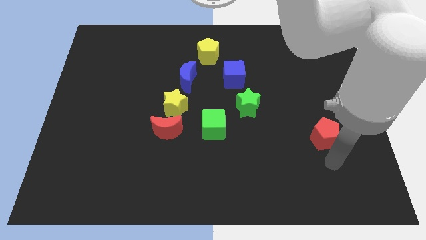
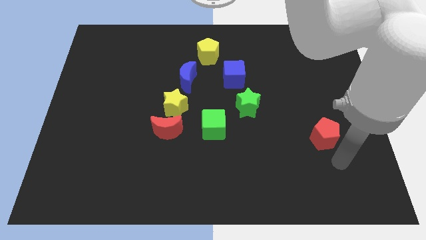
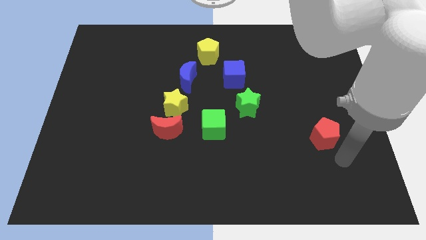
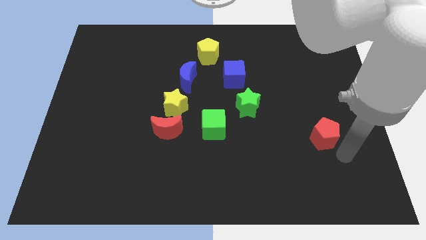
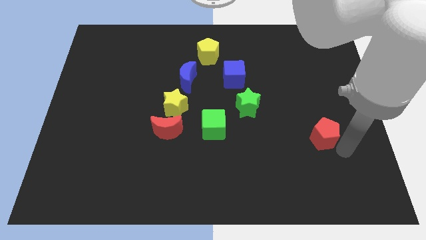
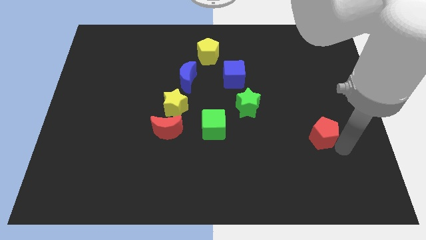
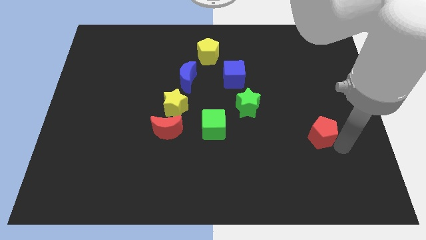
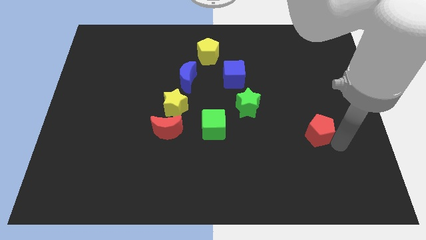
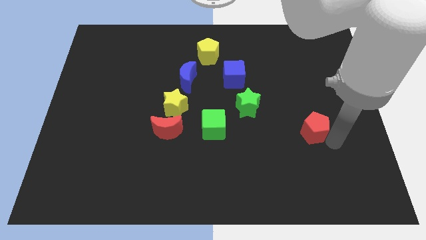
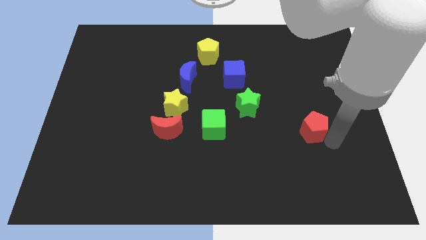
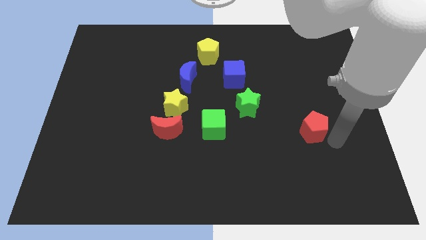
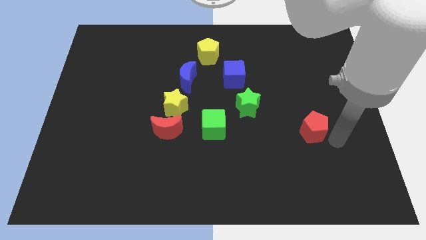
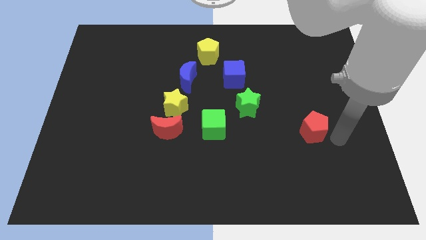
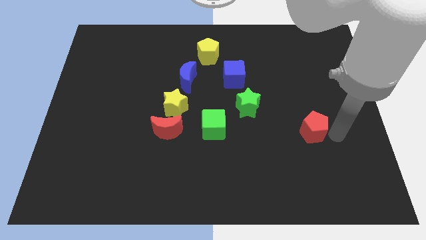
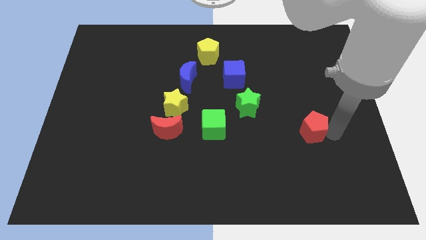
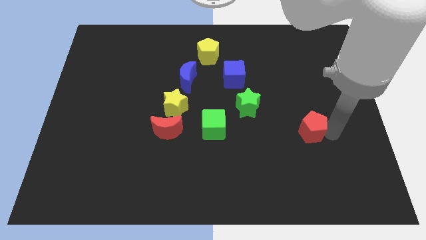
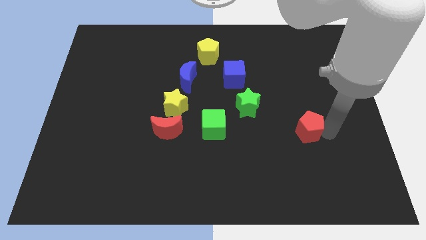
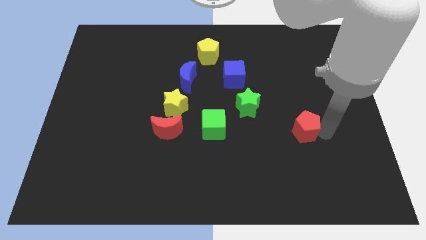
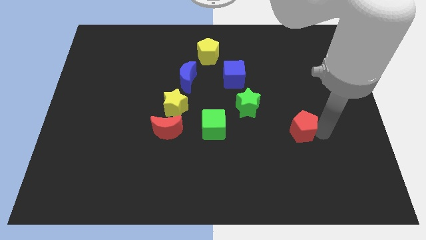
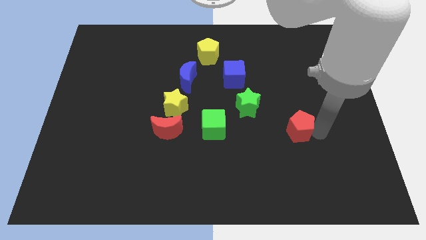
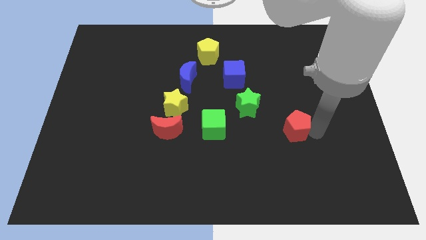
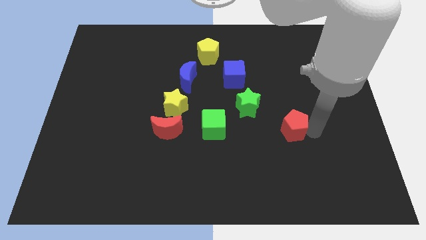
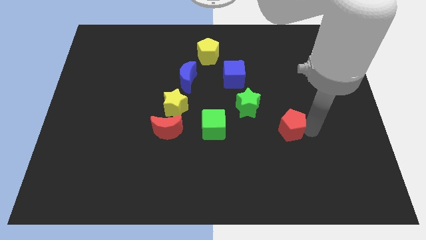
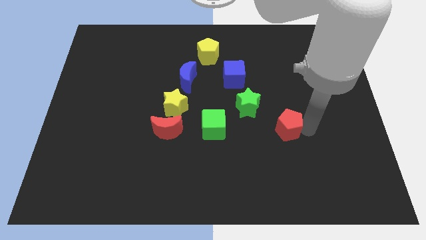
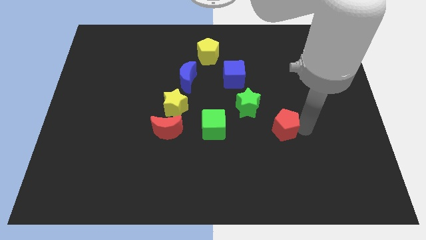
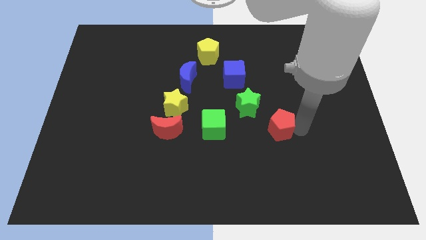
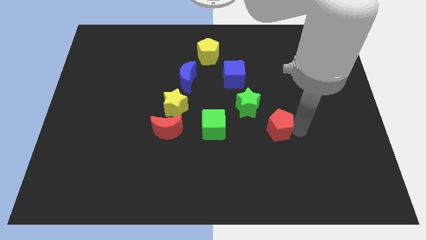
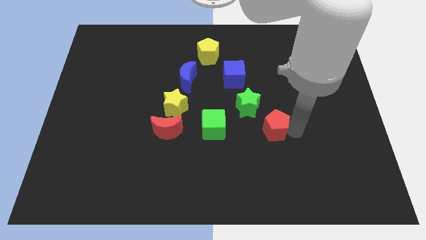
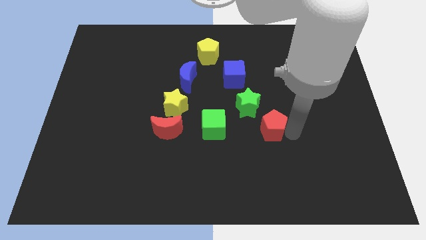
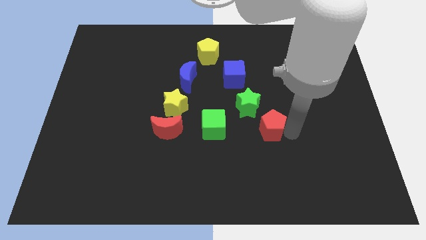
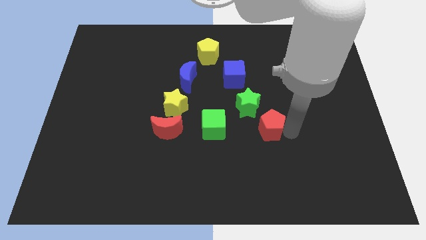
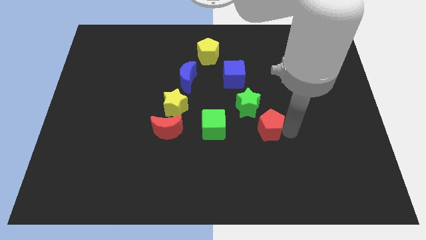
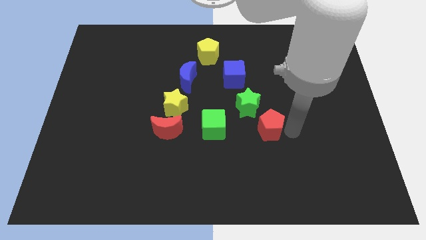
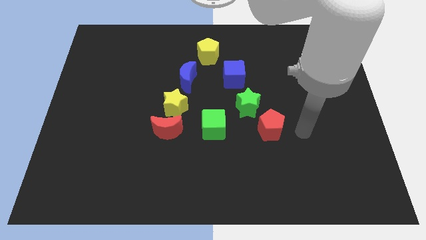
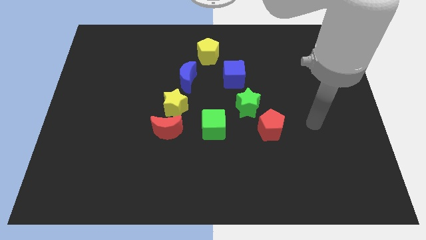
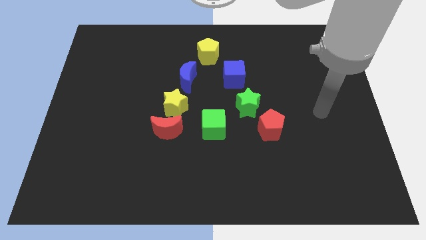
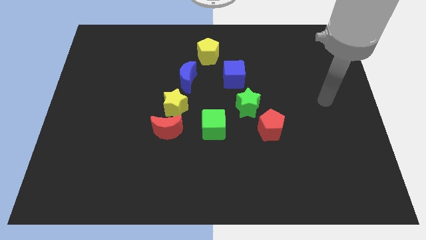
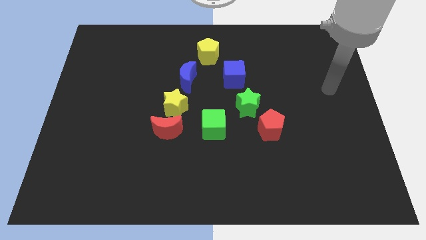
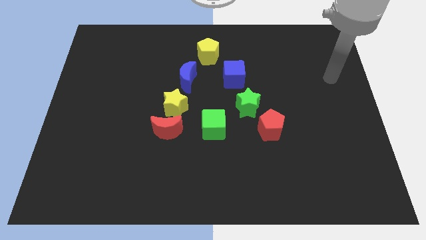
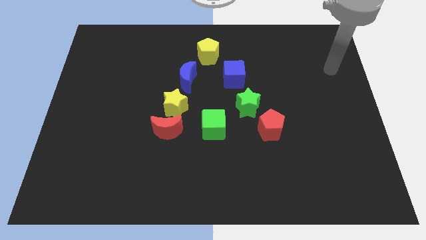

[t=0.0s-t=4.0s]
place the red pentagon to the bottom right side of the green cube

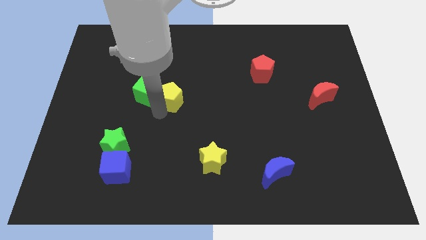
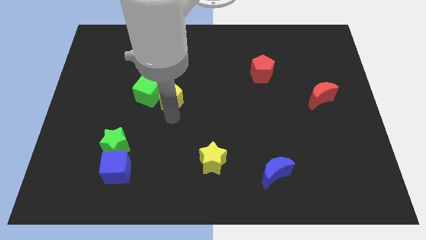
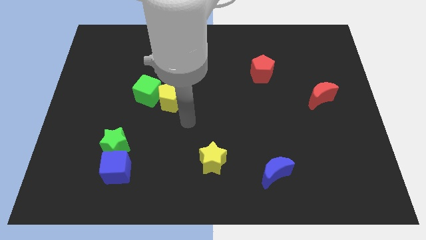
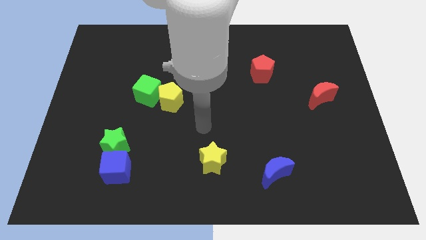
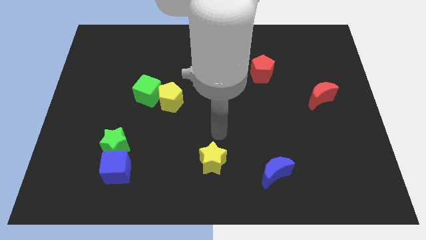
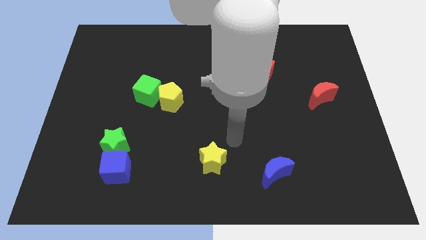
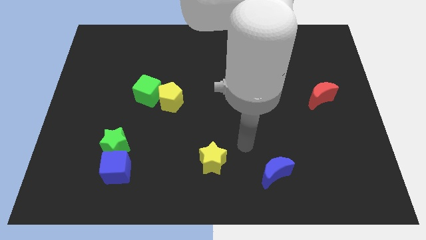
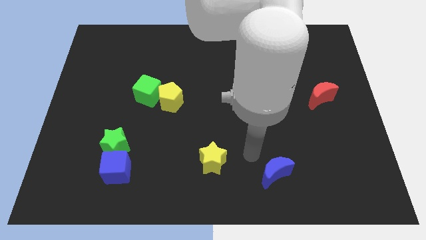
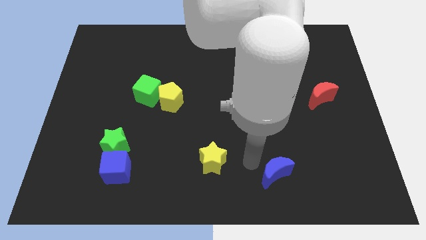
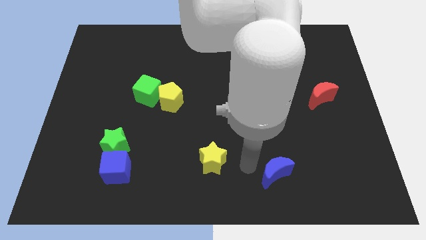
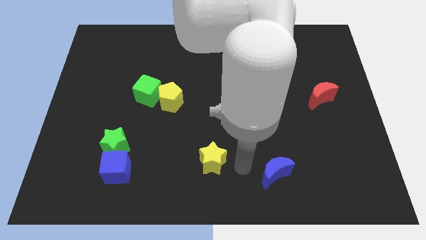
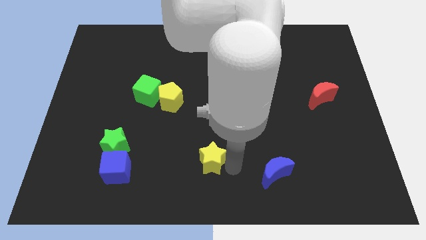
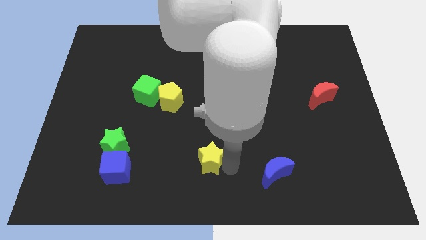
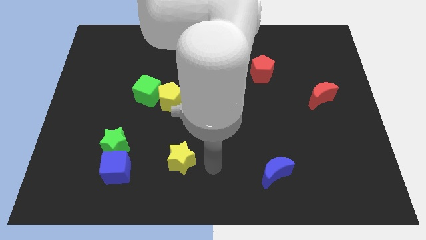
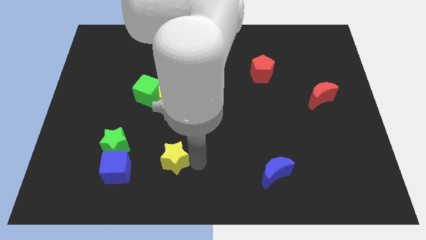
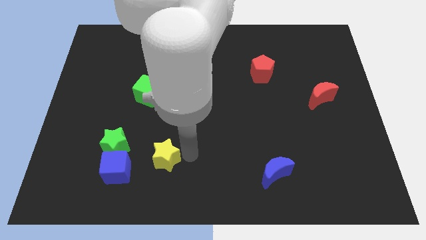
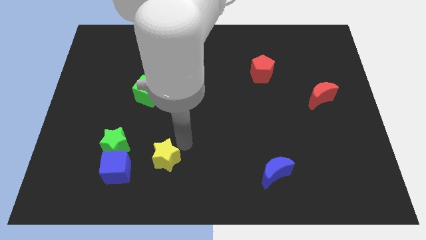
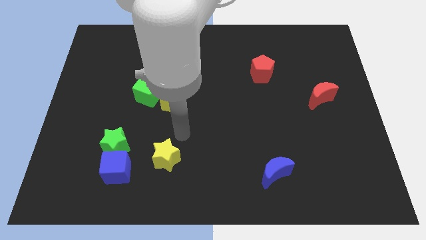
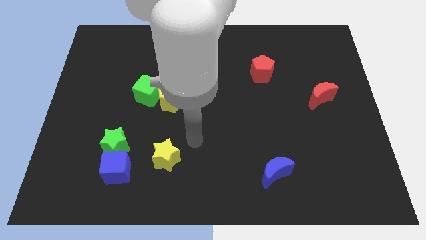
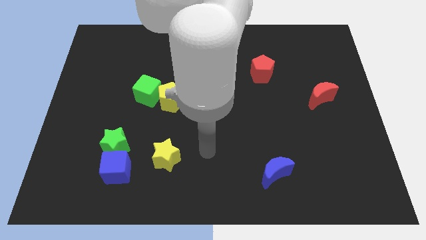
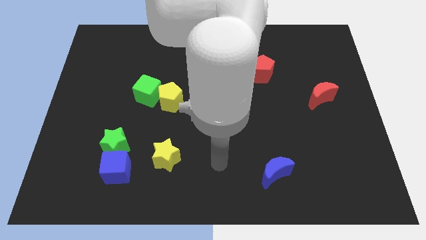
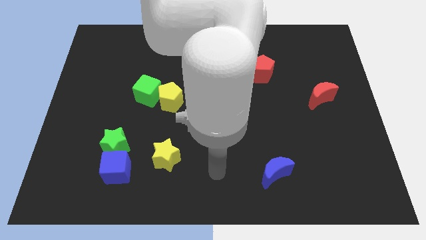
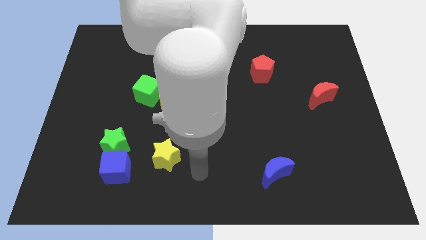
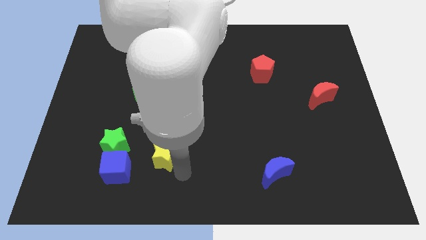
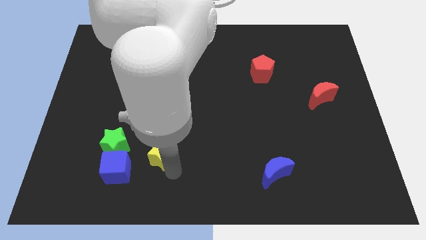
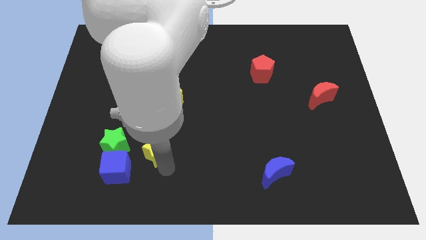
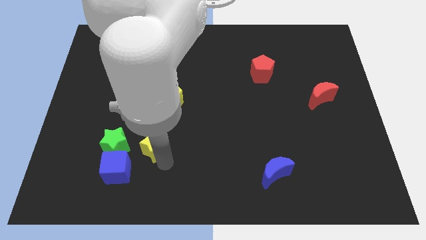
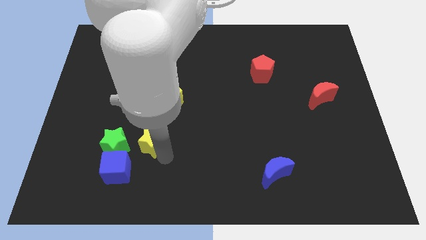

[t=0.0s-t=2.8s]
push the yellow star closer to the green star

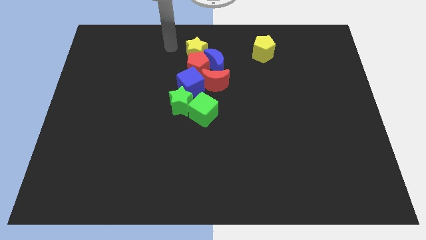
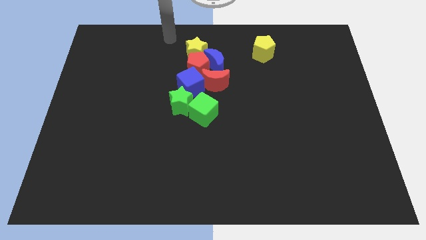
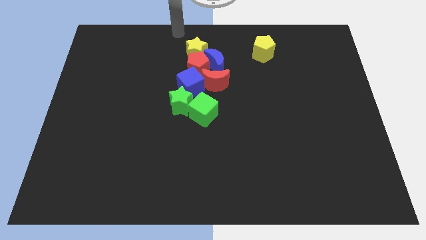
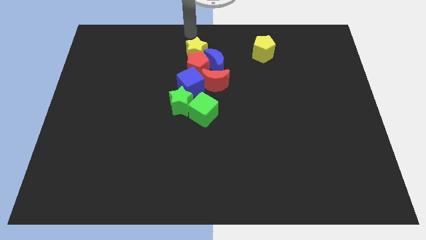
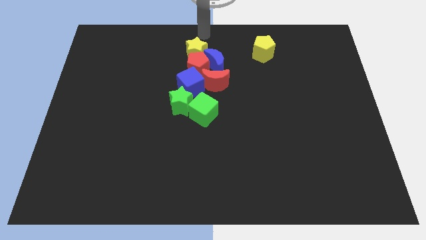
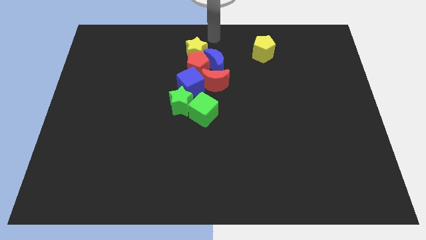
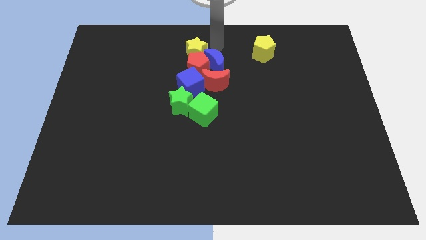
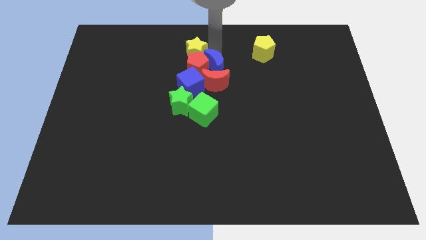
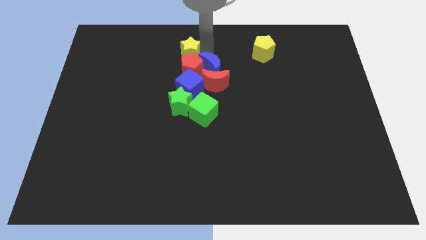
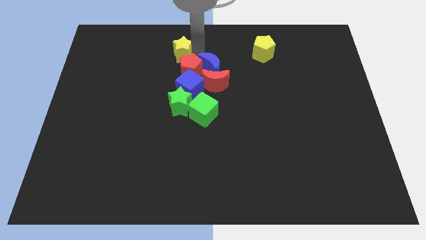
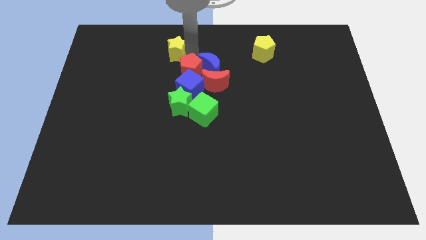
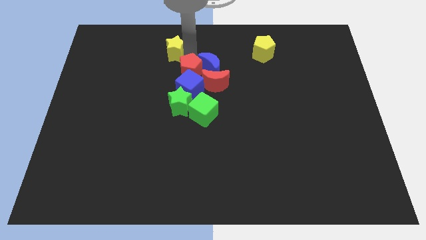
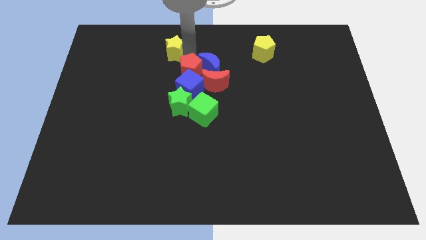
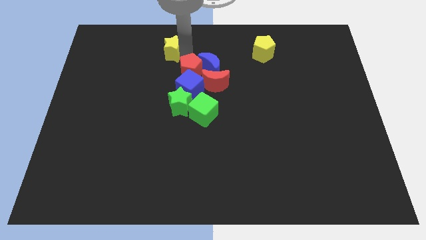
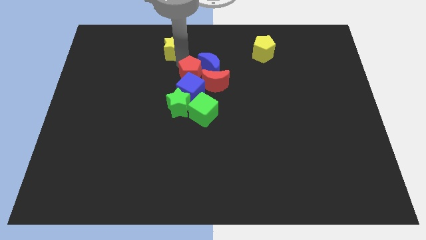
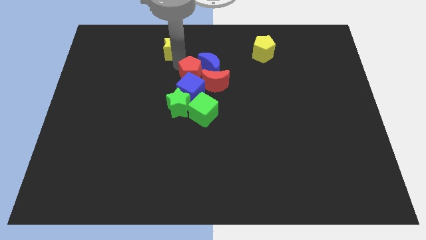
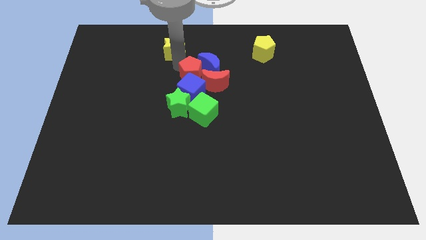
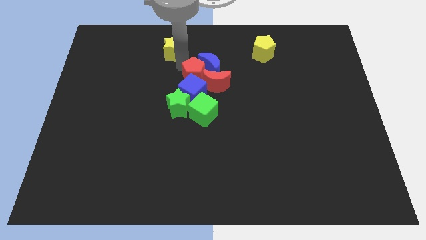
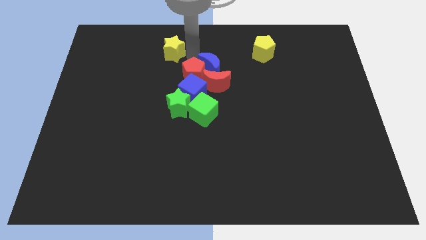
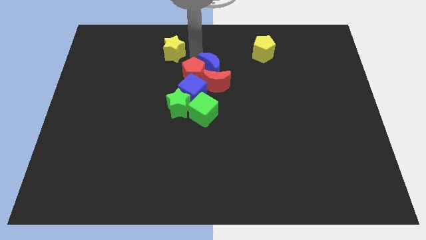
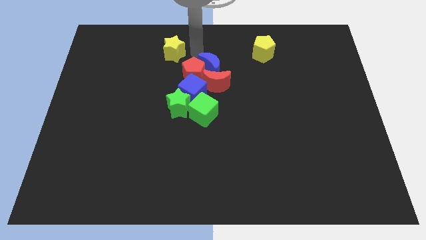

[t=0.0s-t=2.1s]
separate yellow star from red pentagon

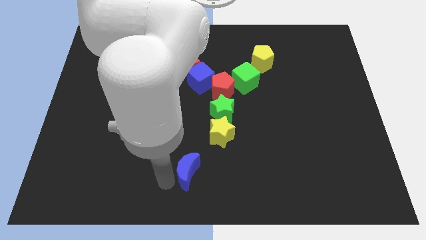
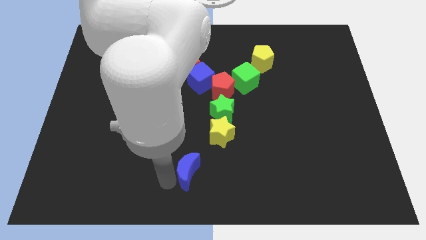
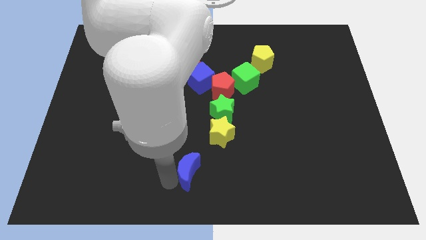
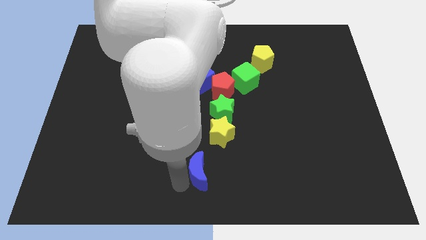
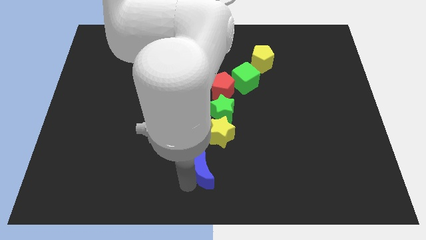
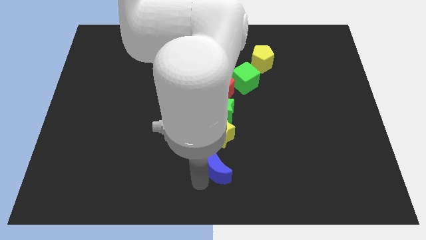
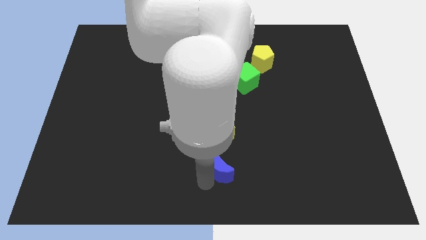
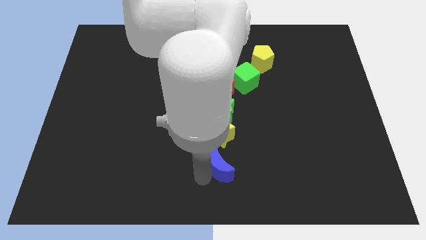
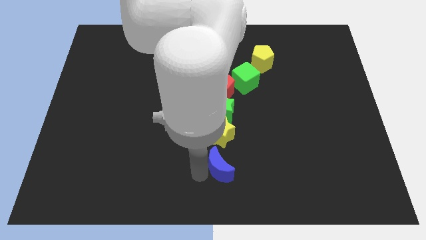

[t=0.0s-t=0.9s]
move blue moon below the yellow star
